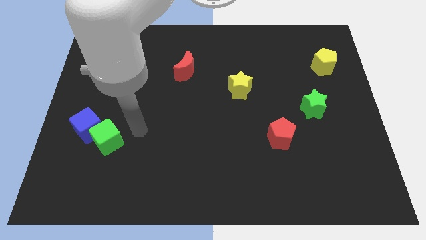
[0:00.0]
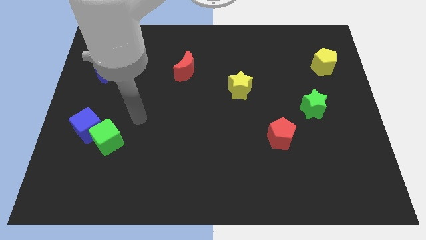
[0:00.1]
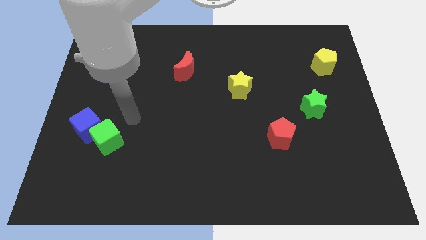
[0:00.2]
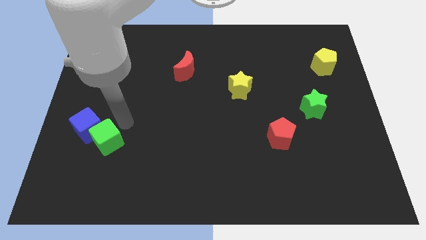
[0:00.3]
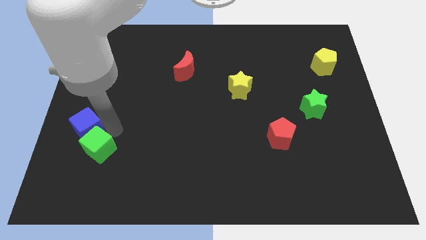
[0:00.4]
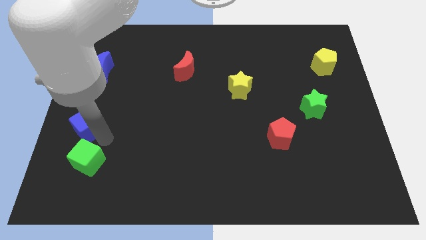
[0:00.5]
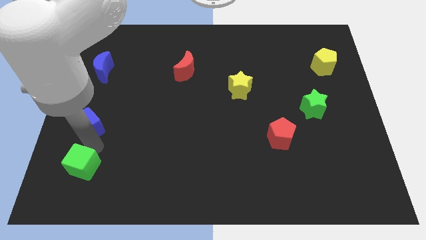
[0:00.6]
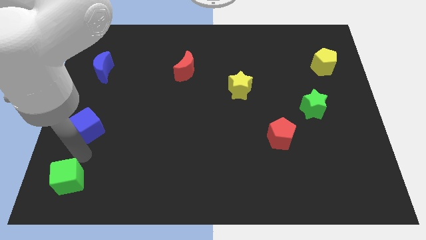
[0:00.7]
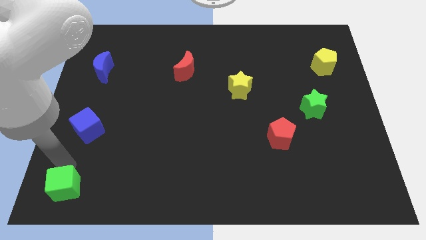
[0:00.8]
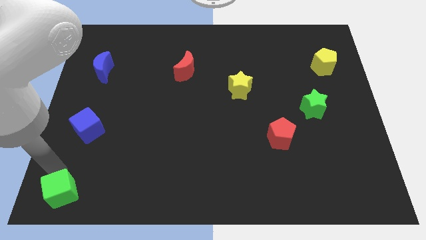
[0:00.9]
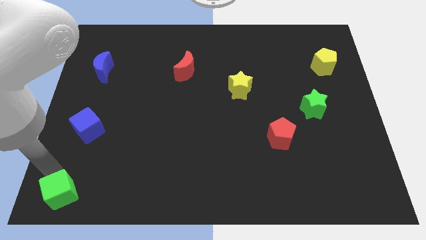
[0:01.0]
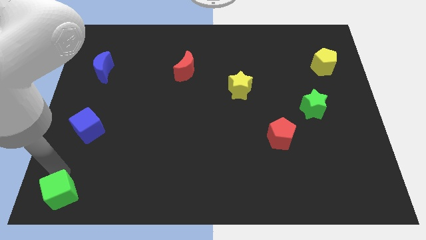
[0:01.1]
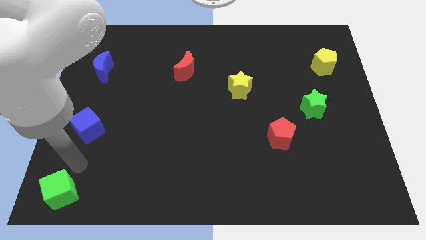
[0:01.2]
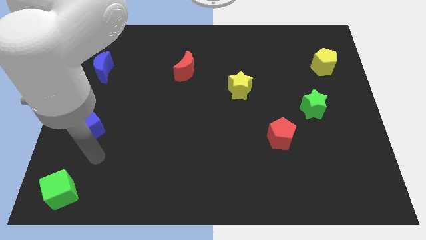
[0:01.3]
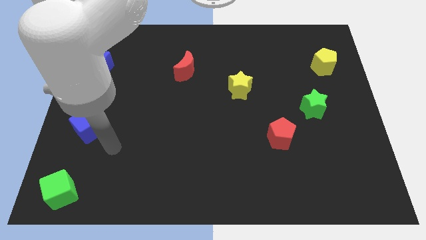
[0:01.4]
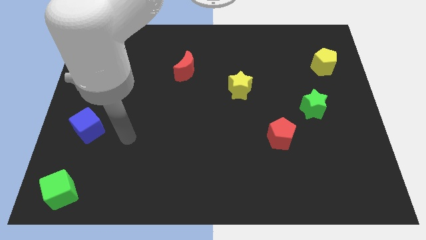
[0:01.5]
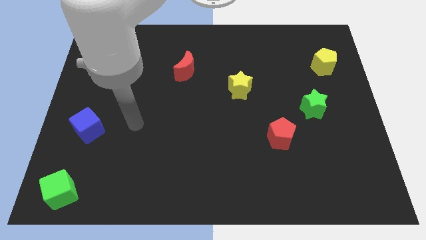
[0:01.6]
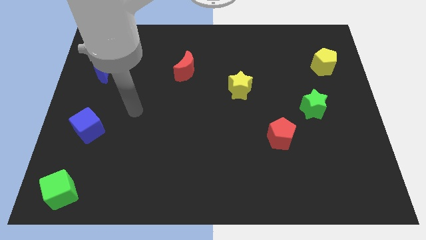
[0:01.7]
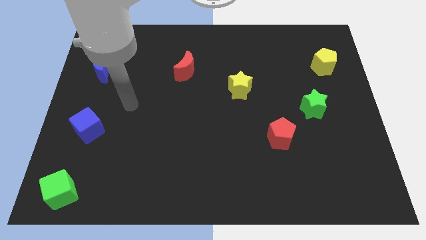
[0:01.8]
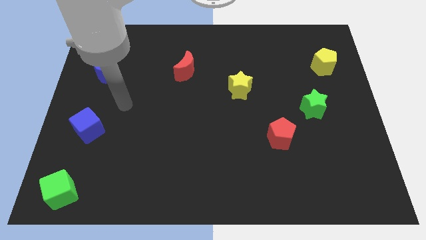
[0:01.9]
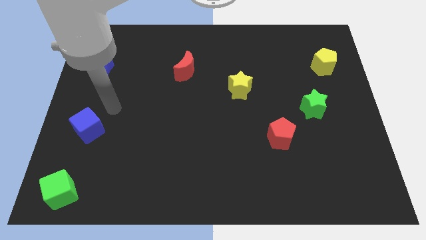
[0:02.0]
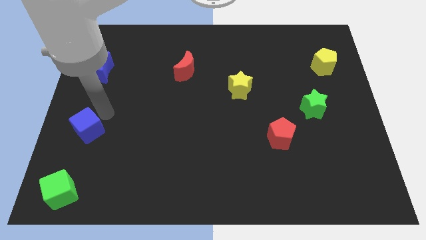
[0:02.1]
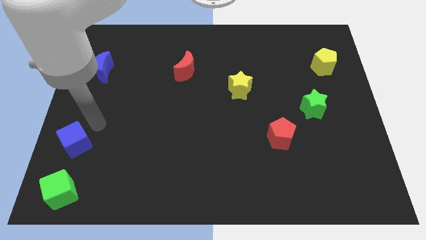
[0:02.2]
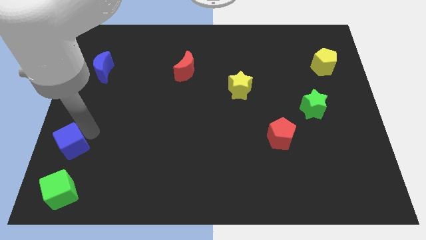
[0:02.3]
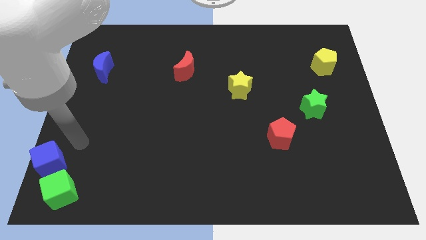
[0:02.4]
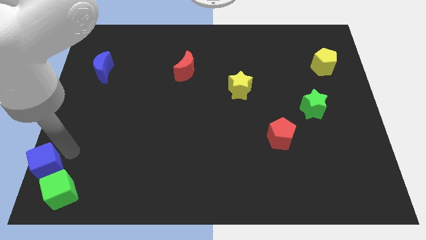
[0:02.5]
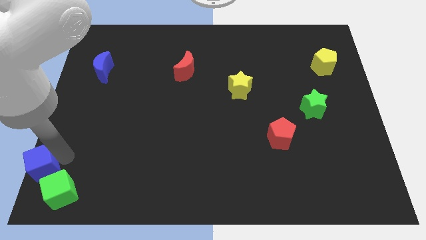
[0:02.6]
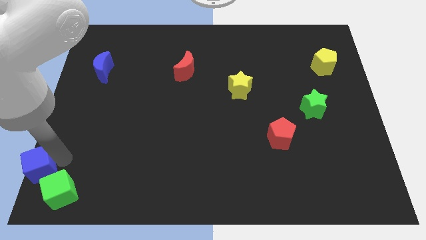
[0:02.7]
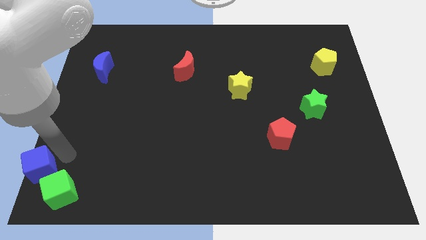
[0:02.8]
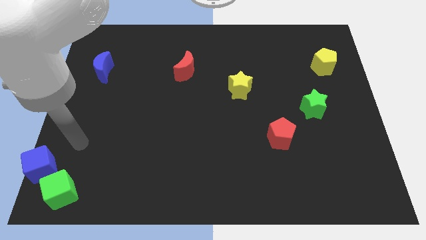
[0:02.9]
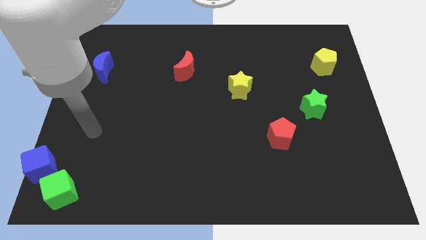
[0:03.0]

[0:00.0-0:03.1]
move the green cube and blue cube to the bottom left corner

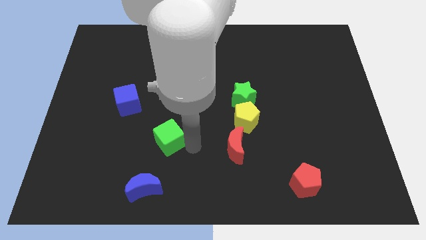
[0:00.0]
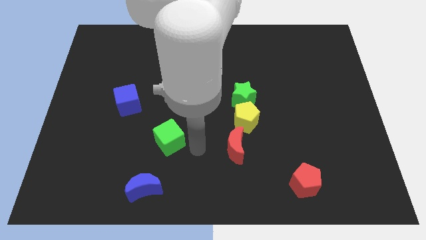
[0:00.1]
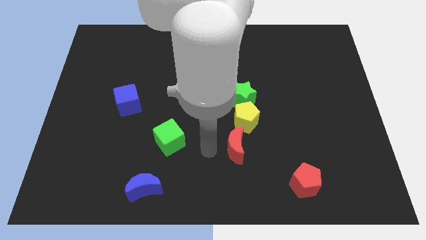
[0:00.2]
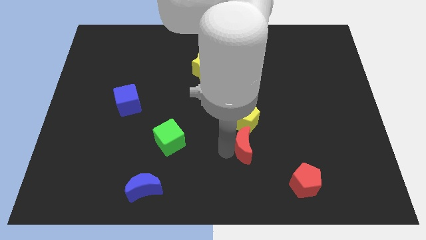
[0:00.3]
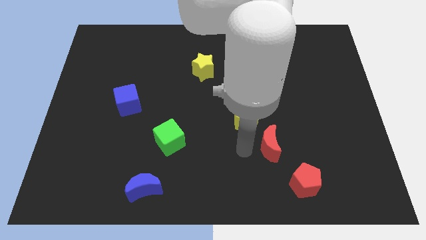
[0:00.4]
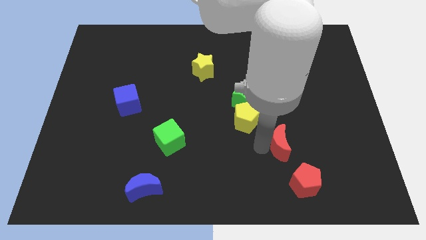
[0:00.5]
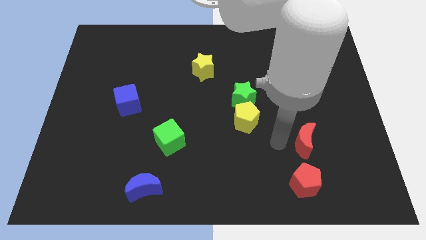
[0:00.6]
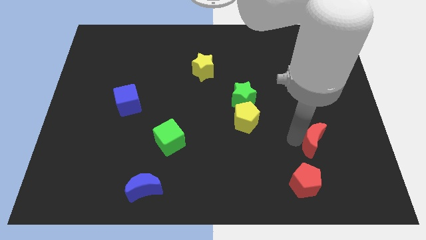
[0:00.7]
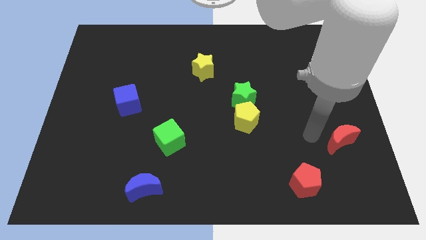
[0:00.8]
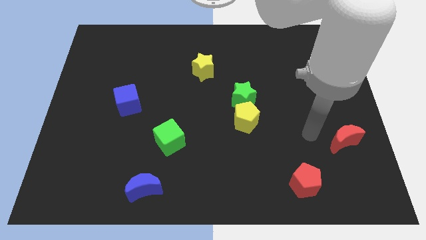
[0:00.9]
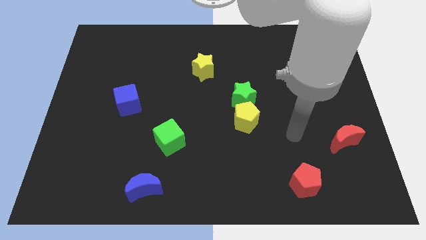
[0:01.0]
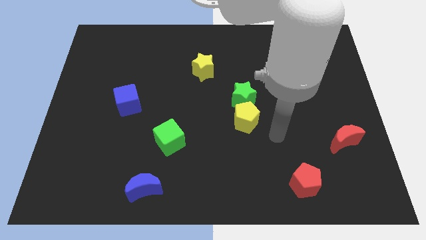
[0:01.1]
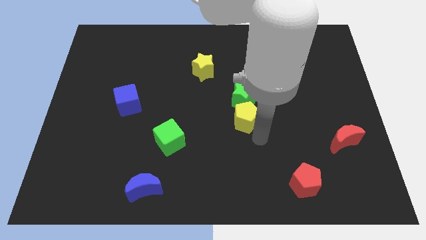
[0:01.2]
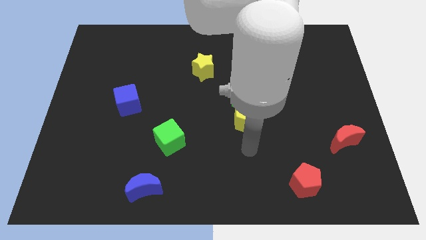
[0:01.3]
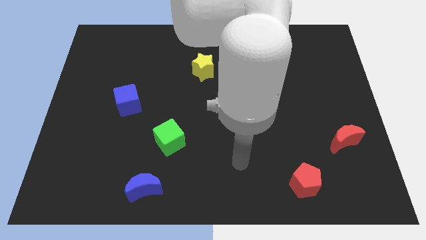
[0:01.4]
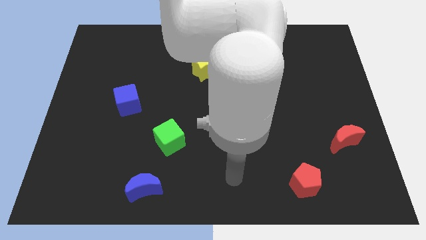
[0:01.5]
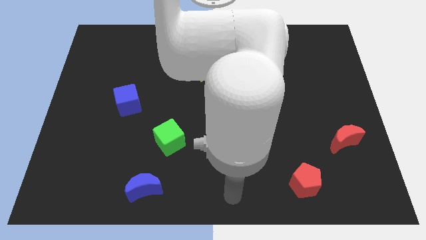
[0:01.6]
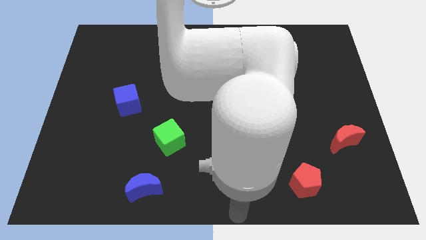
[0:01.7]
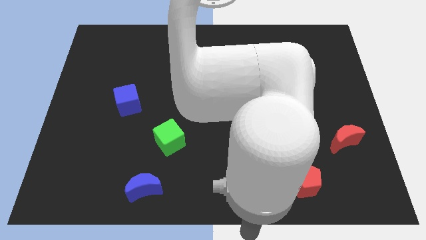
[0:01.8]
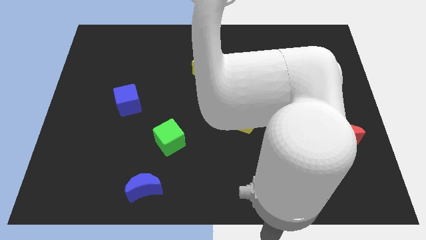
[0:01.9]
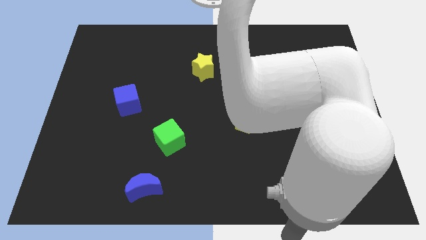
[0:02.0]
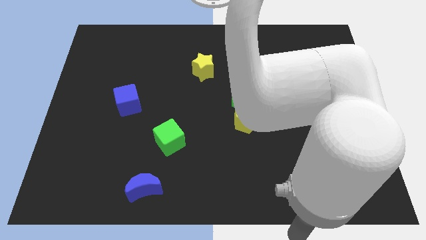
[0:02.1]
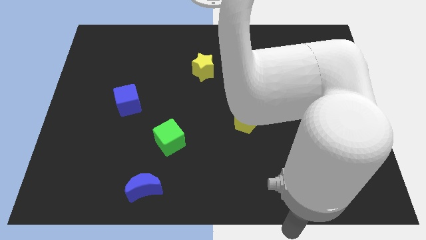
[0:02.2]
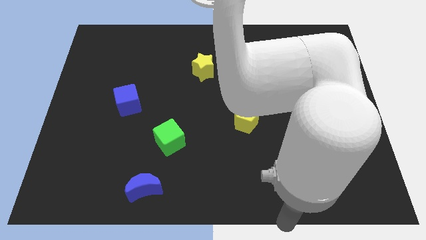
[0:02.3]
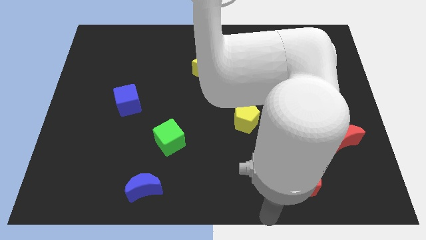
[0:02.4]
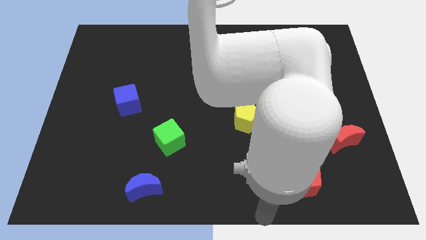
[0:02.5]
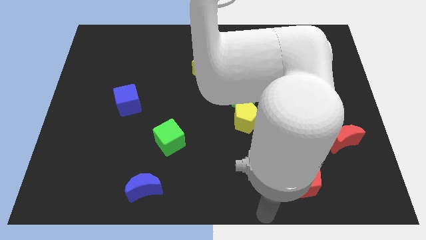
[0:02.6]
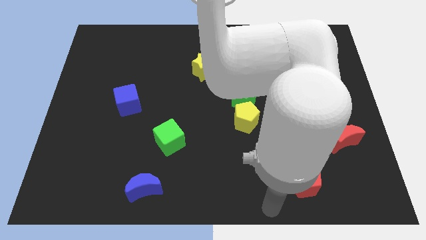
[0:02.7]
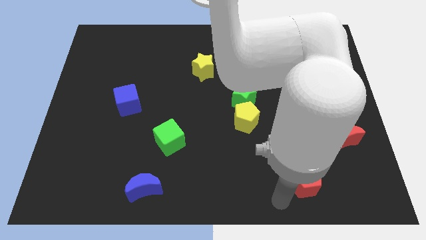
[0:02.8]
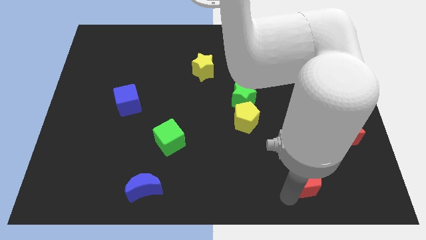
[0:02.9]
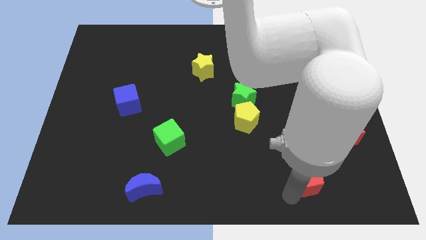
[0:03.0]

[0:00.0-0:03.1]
push the red crescent to the top right of the red pentagon

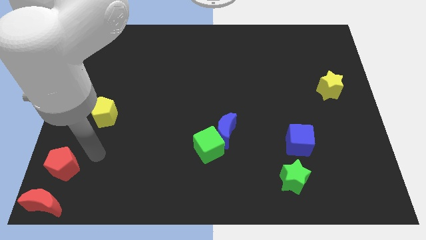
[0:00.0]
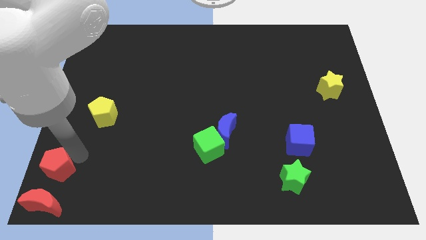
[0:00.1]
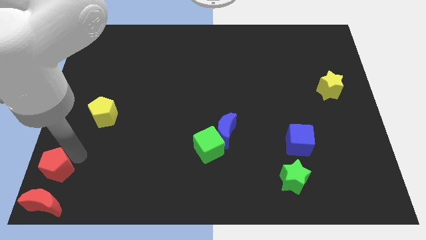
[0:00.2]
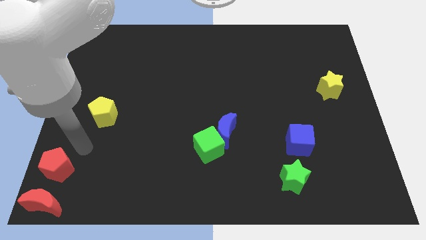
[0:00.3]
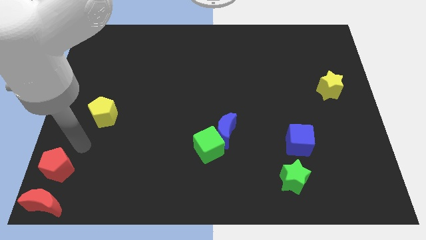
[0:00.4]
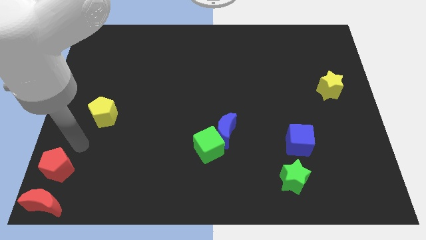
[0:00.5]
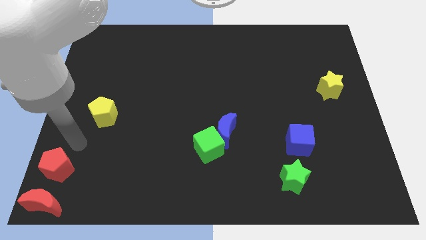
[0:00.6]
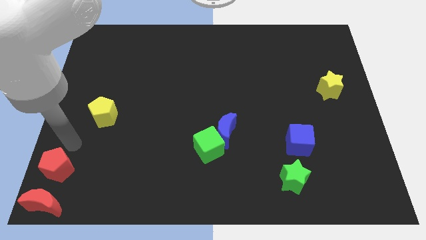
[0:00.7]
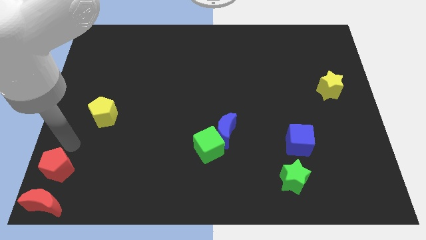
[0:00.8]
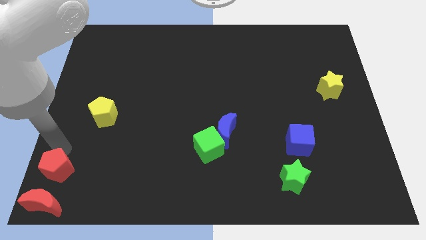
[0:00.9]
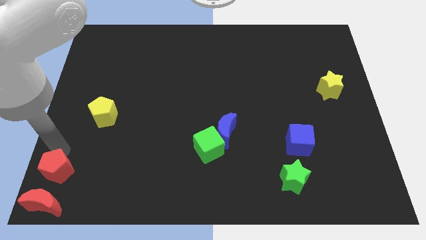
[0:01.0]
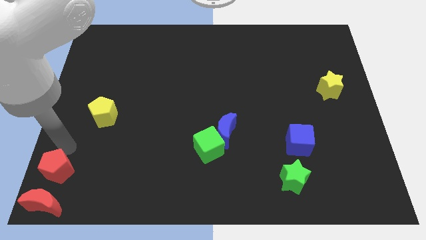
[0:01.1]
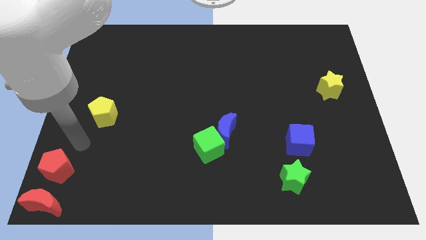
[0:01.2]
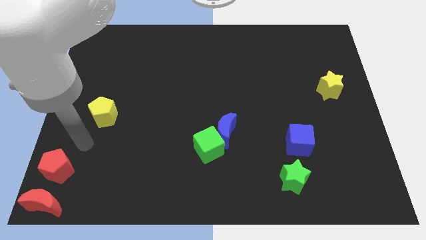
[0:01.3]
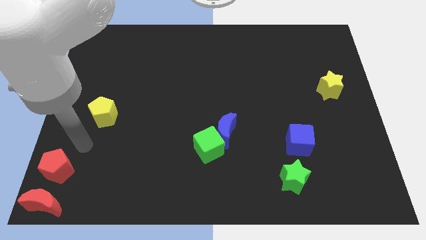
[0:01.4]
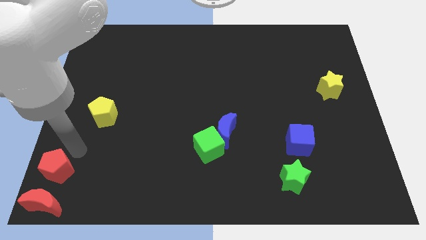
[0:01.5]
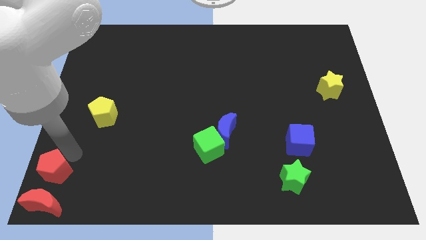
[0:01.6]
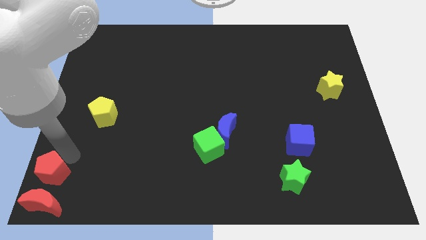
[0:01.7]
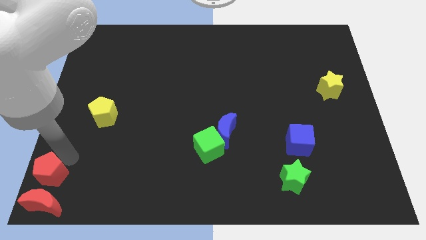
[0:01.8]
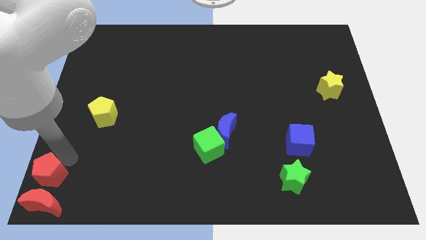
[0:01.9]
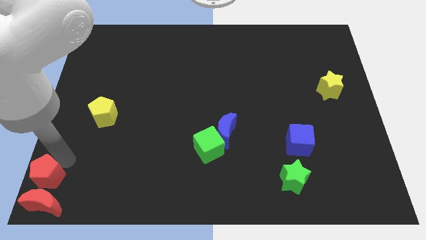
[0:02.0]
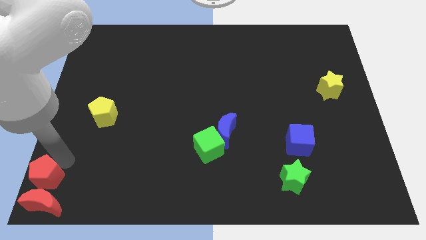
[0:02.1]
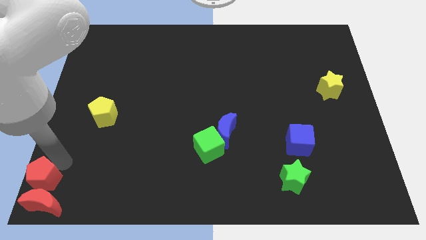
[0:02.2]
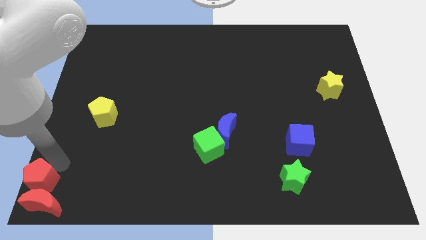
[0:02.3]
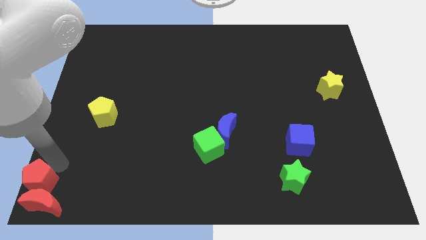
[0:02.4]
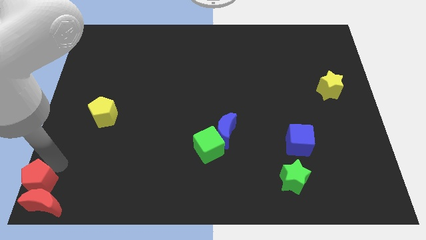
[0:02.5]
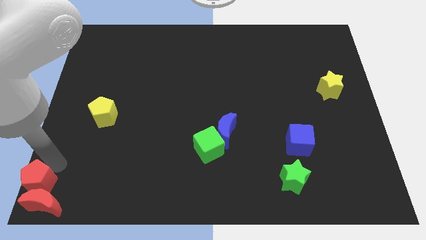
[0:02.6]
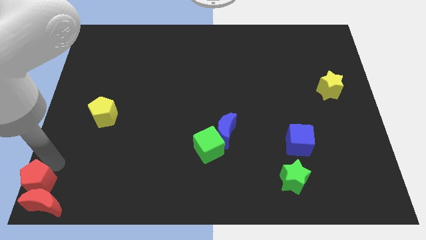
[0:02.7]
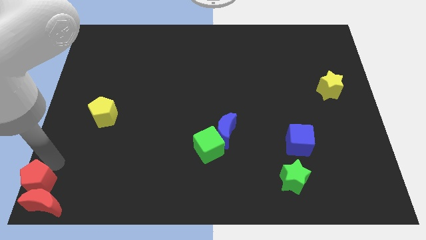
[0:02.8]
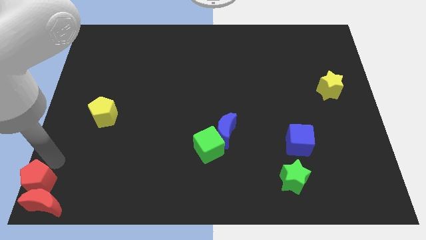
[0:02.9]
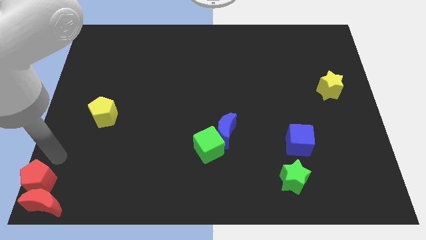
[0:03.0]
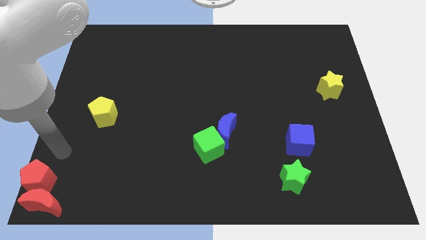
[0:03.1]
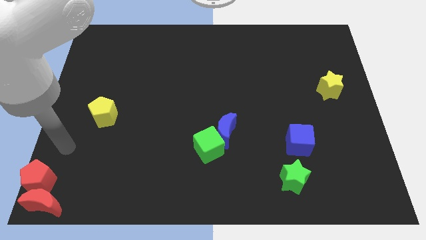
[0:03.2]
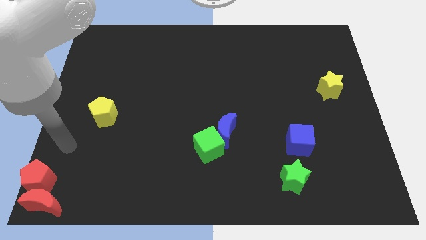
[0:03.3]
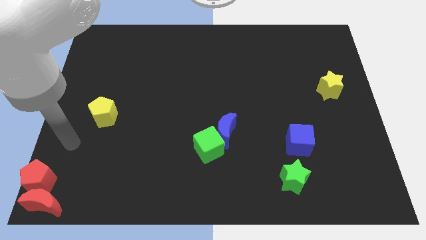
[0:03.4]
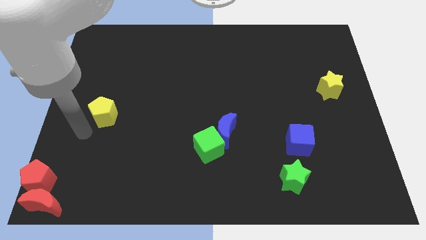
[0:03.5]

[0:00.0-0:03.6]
push the red pentagon into the red crescent
